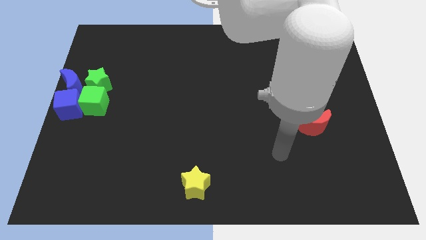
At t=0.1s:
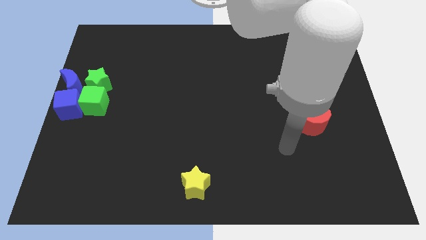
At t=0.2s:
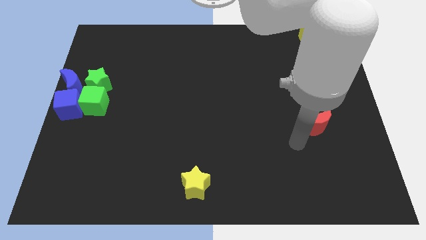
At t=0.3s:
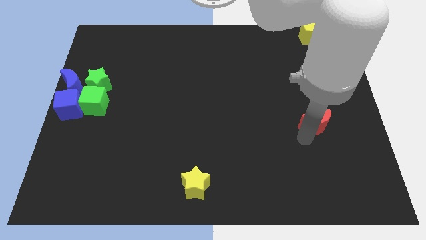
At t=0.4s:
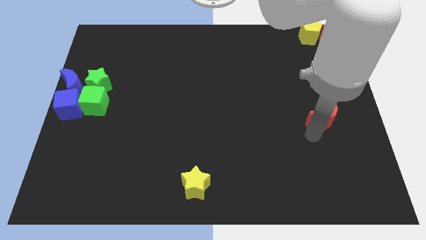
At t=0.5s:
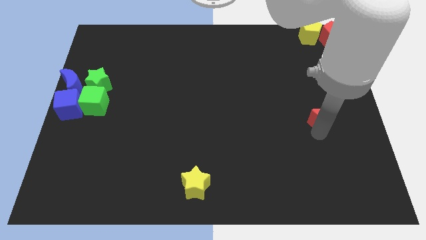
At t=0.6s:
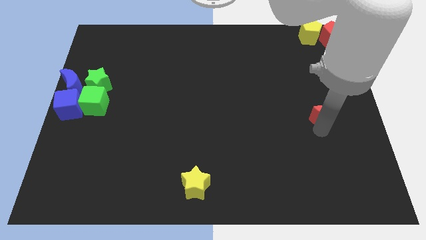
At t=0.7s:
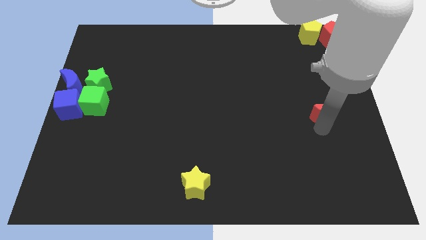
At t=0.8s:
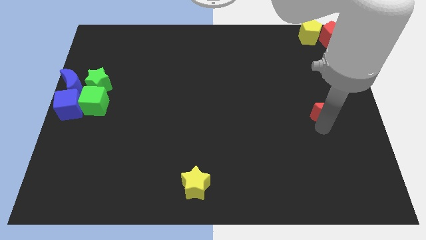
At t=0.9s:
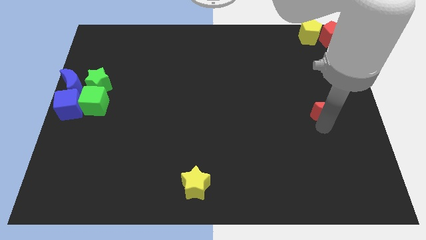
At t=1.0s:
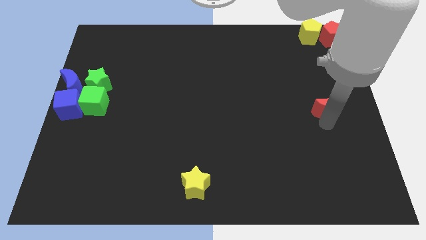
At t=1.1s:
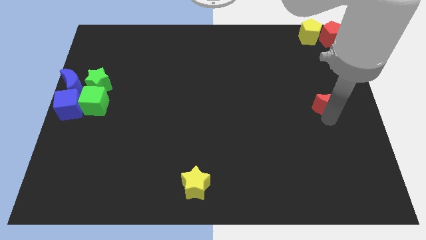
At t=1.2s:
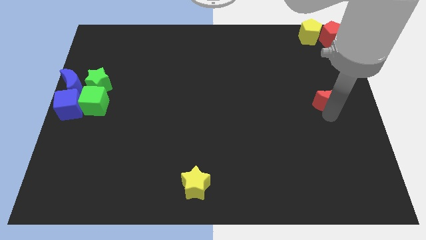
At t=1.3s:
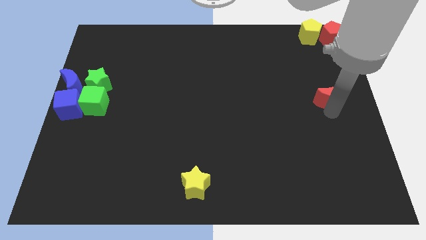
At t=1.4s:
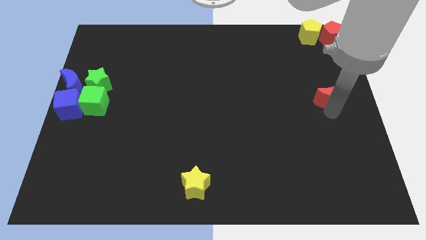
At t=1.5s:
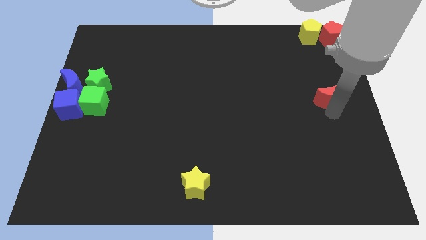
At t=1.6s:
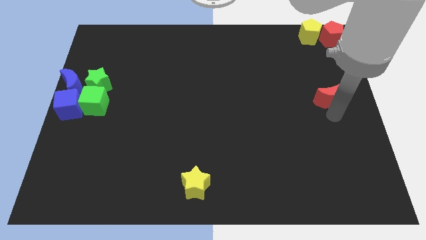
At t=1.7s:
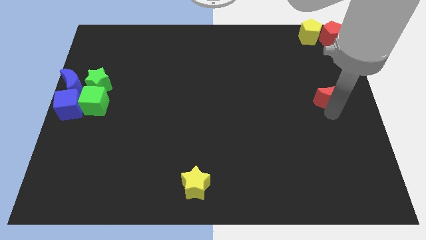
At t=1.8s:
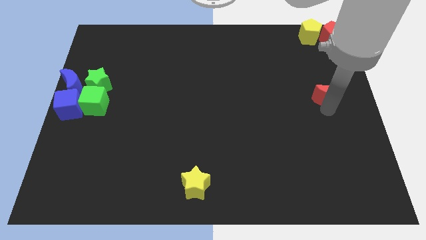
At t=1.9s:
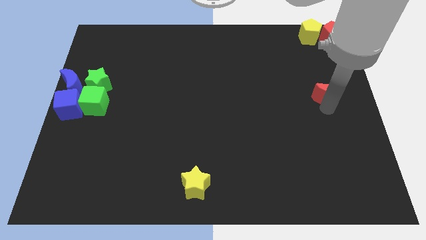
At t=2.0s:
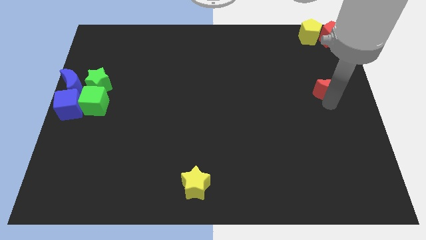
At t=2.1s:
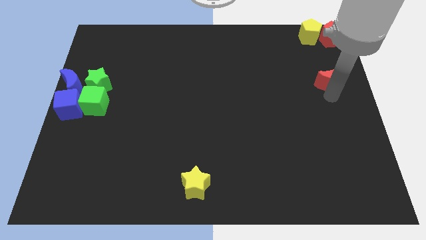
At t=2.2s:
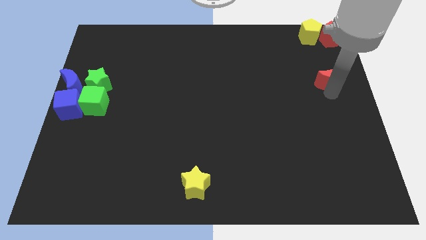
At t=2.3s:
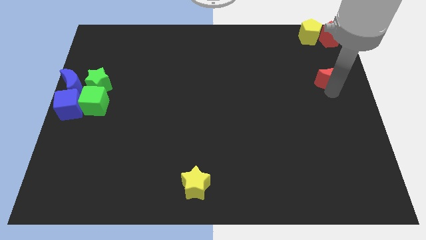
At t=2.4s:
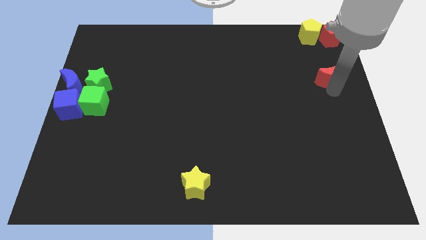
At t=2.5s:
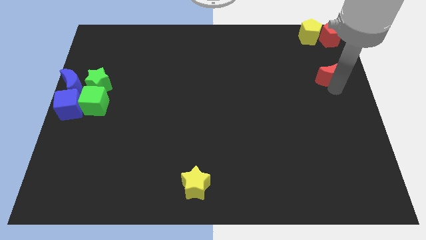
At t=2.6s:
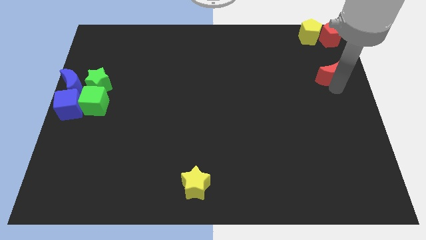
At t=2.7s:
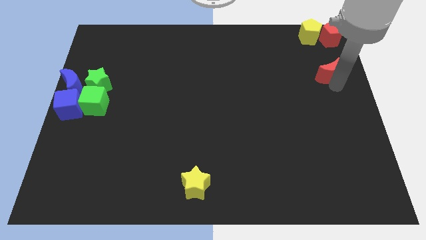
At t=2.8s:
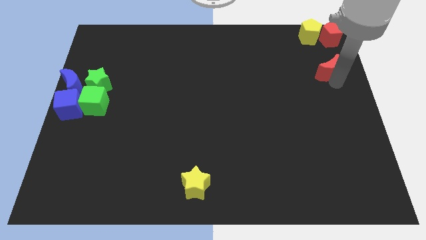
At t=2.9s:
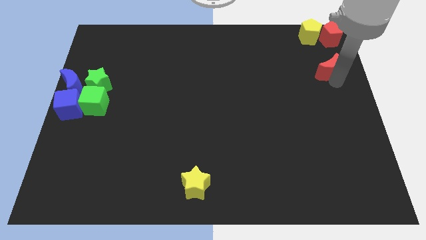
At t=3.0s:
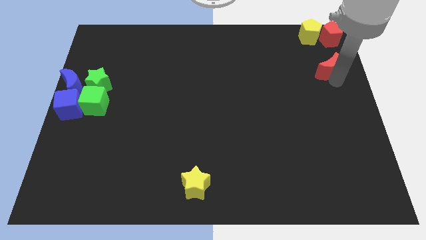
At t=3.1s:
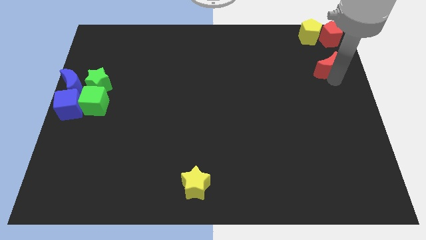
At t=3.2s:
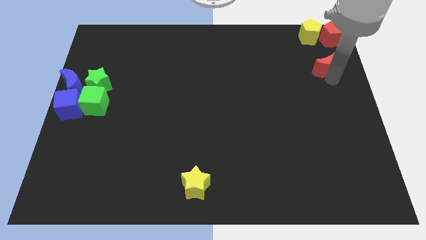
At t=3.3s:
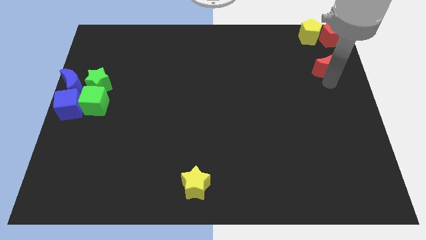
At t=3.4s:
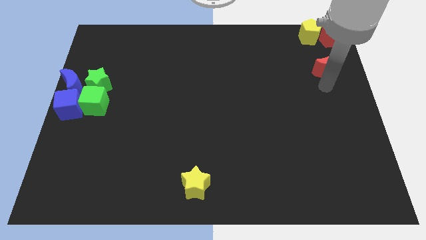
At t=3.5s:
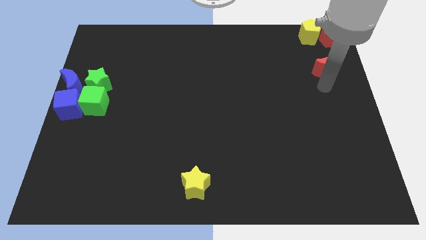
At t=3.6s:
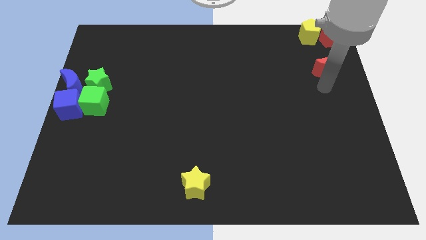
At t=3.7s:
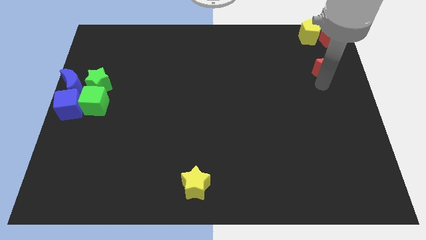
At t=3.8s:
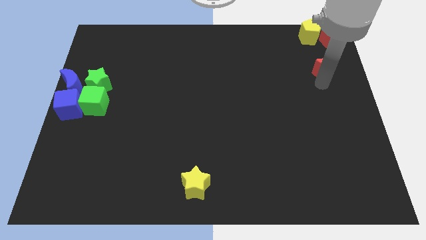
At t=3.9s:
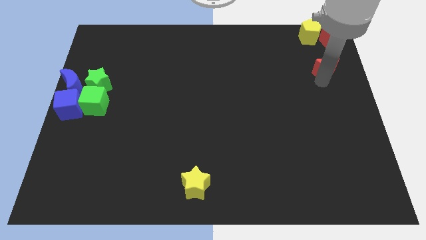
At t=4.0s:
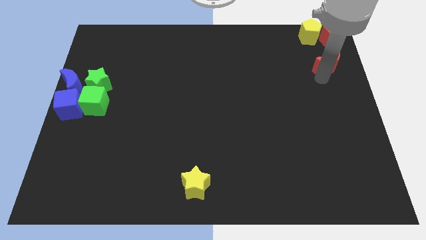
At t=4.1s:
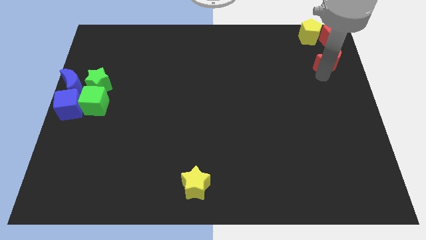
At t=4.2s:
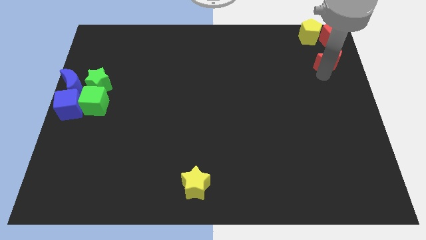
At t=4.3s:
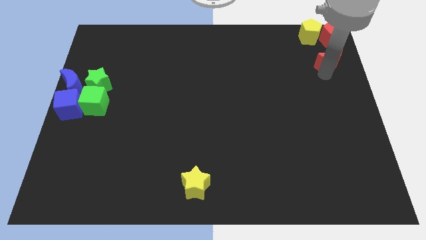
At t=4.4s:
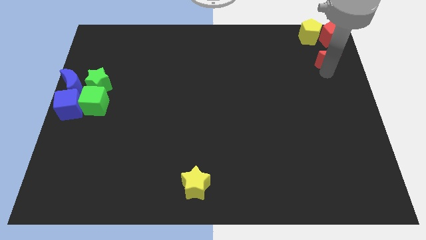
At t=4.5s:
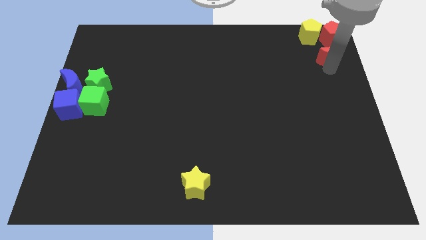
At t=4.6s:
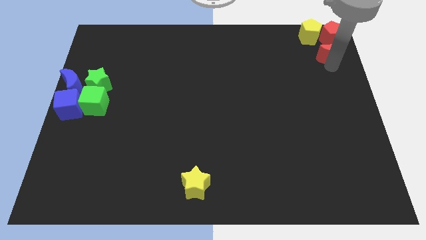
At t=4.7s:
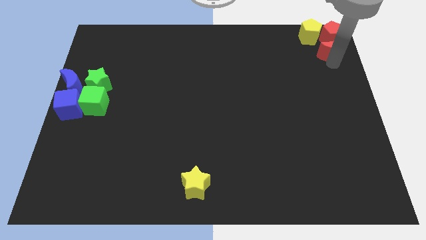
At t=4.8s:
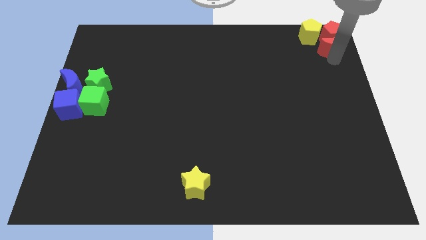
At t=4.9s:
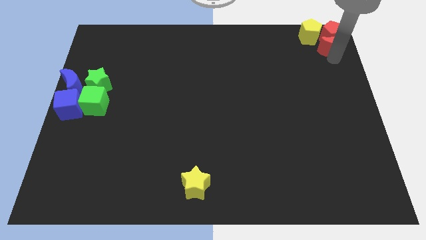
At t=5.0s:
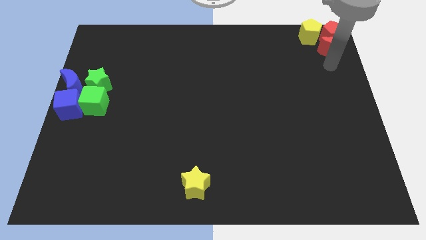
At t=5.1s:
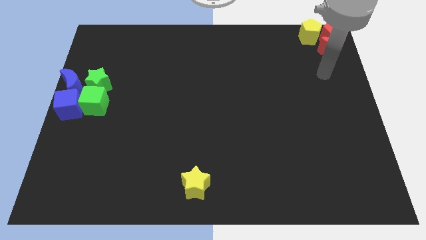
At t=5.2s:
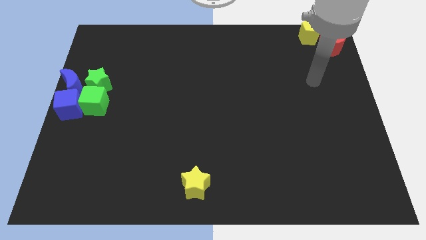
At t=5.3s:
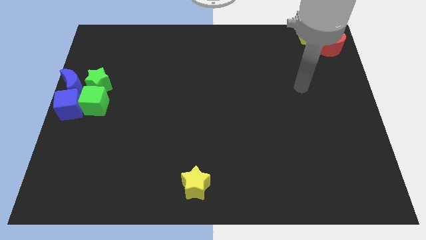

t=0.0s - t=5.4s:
push the red crescent close to the red pentagon

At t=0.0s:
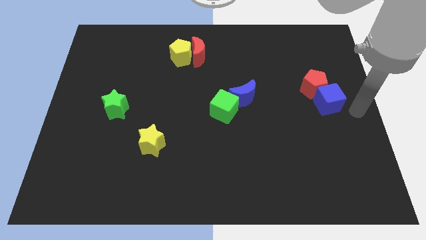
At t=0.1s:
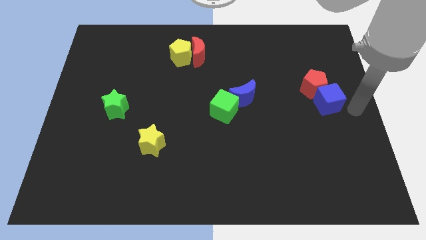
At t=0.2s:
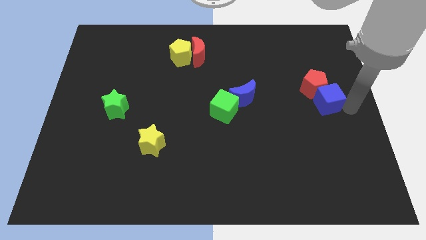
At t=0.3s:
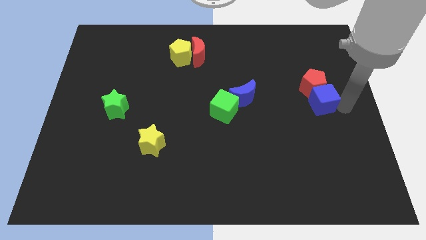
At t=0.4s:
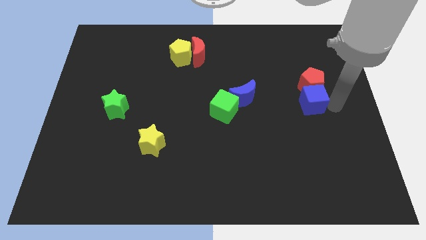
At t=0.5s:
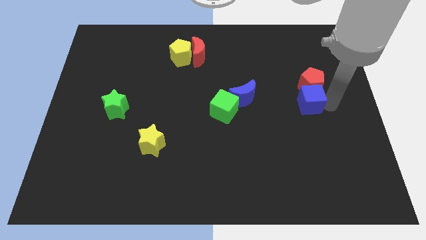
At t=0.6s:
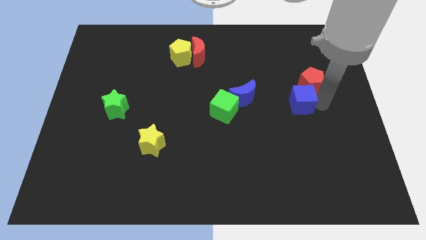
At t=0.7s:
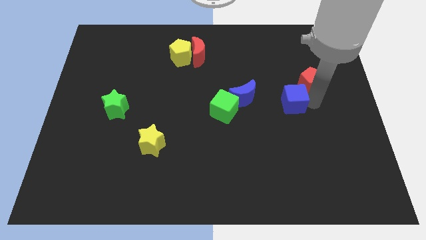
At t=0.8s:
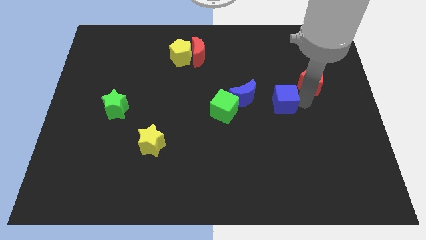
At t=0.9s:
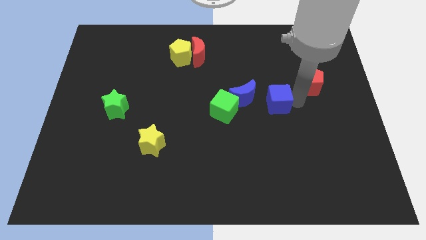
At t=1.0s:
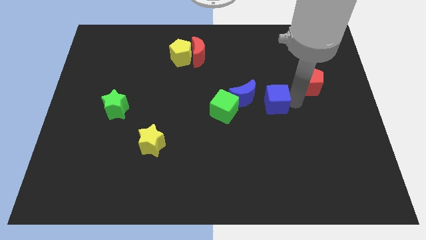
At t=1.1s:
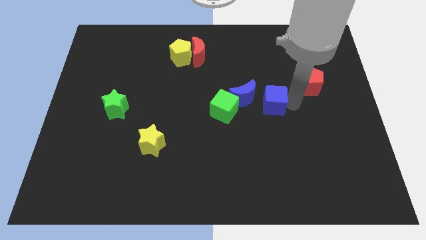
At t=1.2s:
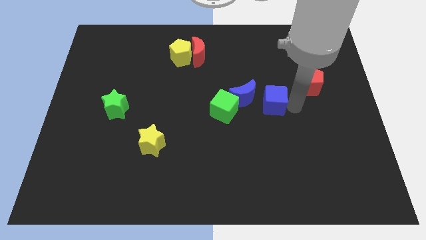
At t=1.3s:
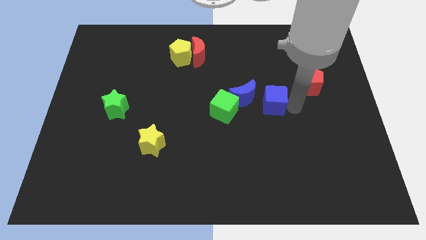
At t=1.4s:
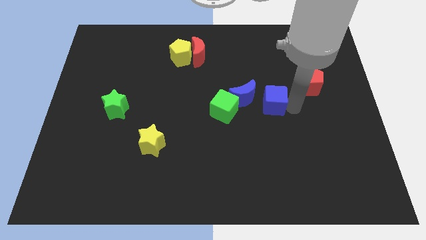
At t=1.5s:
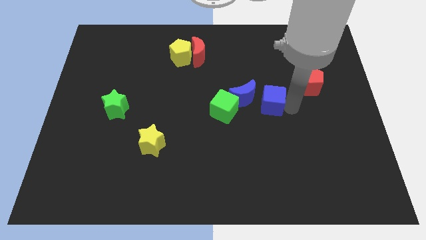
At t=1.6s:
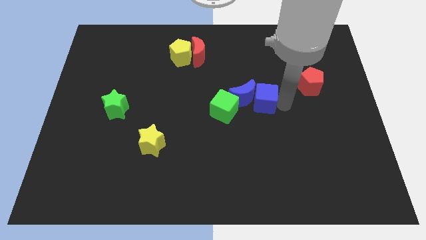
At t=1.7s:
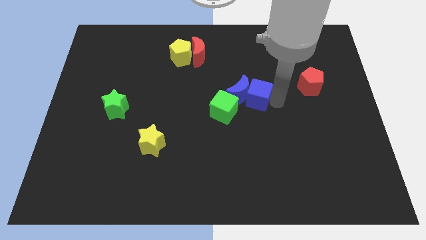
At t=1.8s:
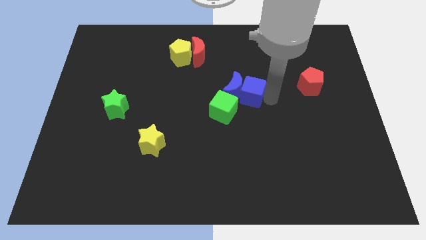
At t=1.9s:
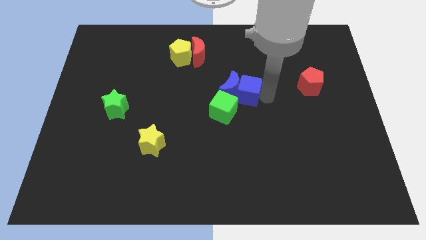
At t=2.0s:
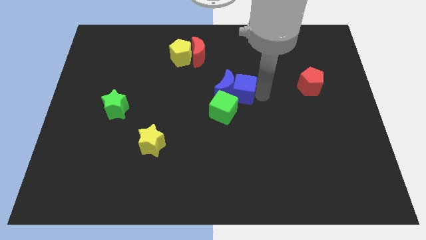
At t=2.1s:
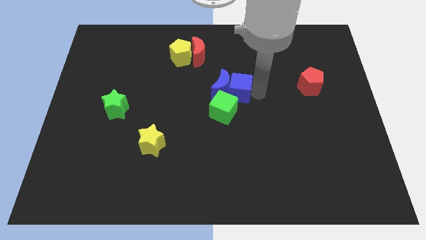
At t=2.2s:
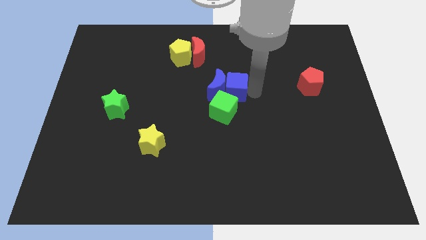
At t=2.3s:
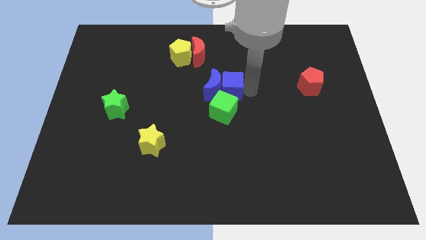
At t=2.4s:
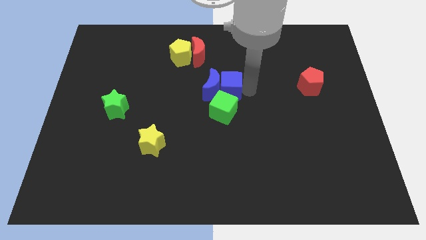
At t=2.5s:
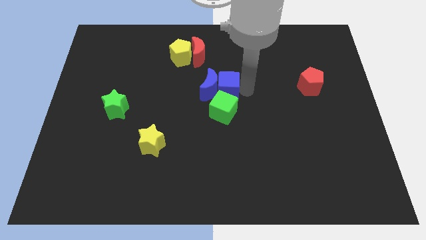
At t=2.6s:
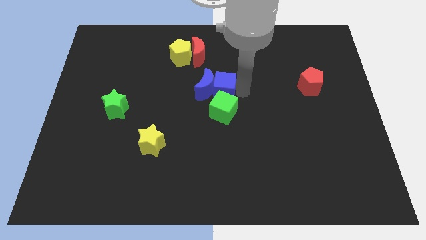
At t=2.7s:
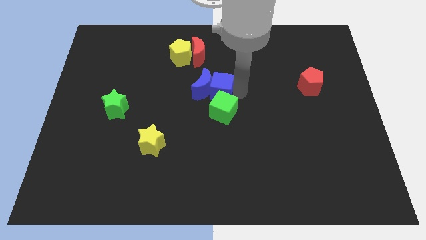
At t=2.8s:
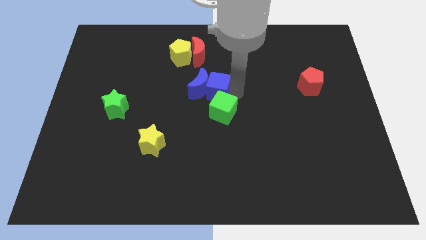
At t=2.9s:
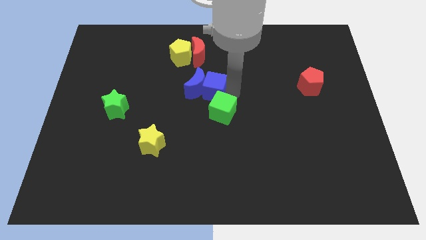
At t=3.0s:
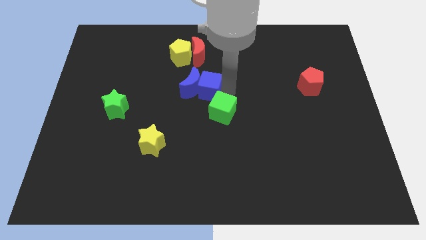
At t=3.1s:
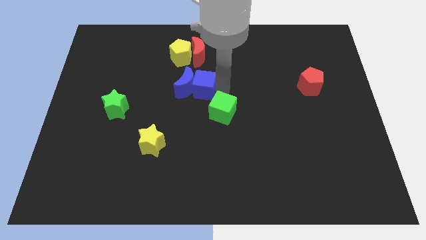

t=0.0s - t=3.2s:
move the blue blocks to the center of the board

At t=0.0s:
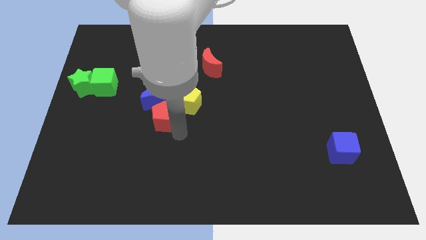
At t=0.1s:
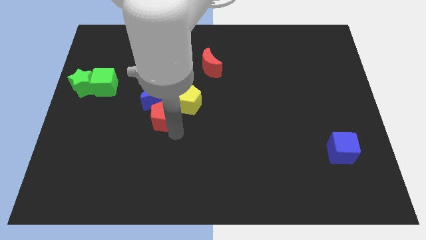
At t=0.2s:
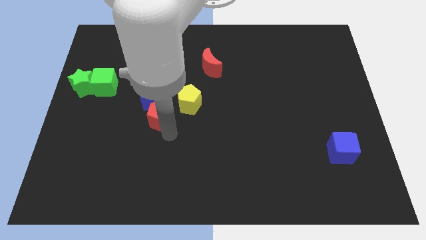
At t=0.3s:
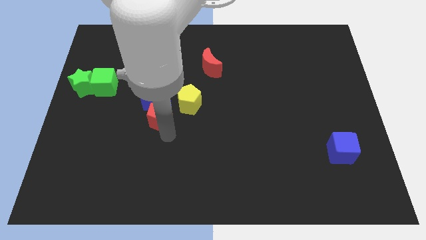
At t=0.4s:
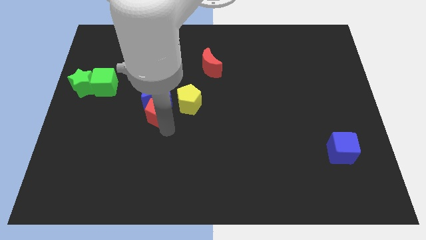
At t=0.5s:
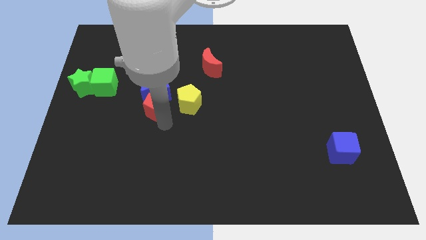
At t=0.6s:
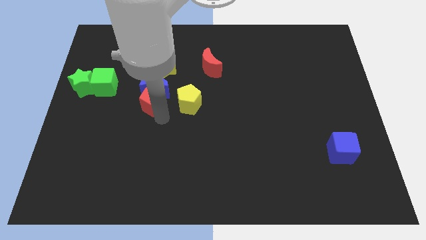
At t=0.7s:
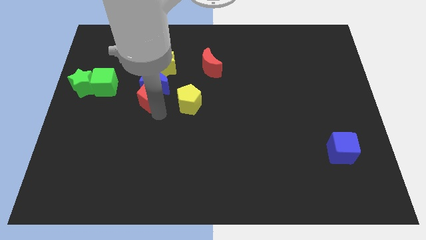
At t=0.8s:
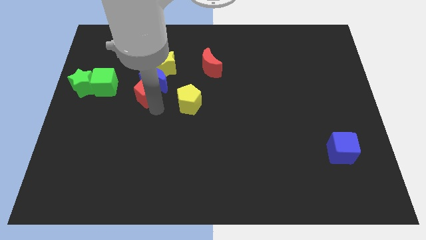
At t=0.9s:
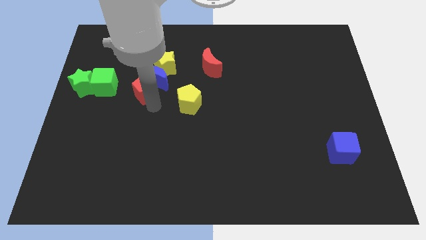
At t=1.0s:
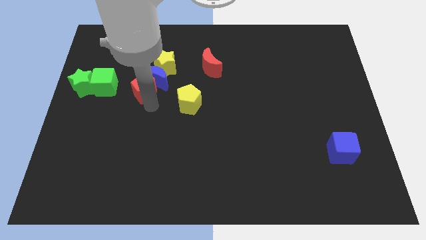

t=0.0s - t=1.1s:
push the red pentagon into the blue crescent
